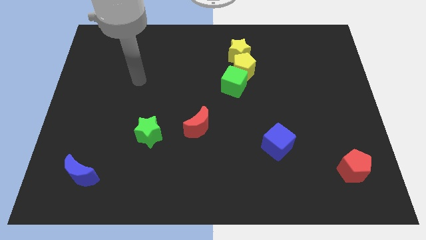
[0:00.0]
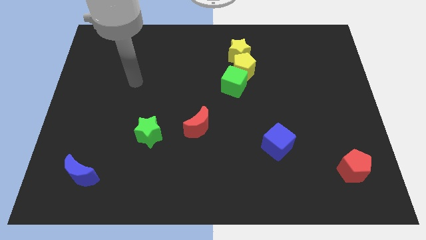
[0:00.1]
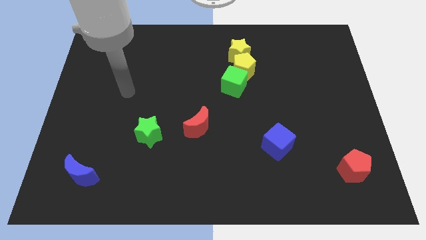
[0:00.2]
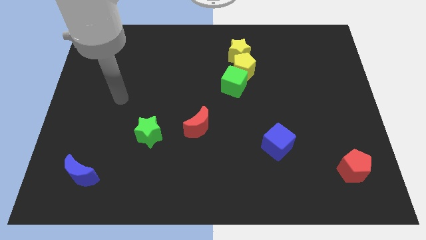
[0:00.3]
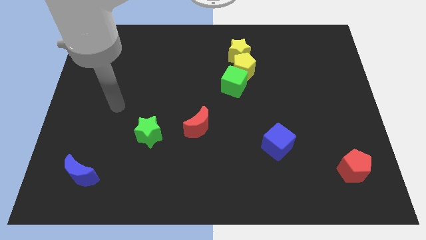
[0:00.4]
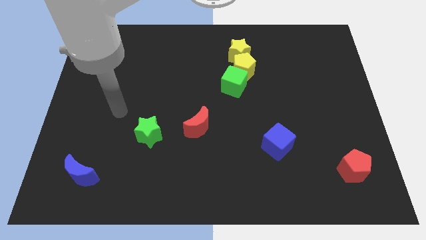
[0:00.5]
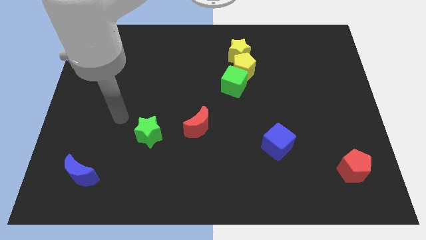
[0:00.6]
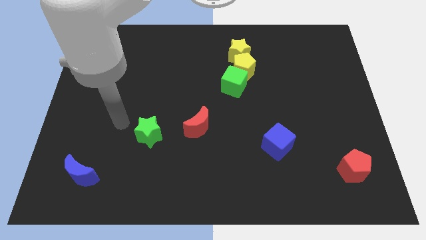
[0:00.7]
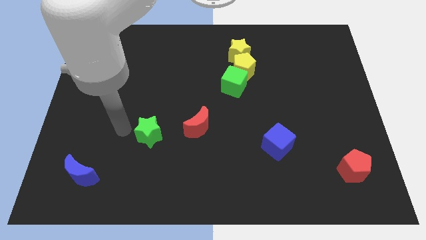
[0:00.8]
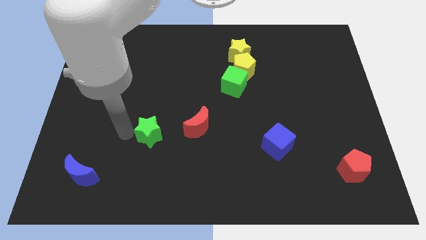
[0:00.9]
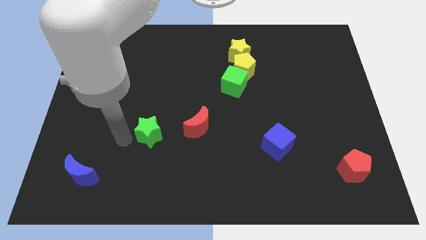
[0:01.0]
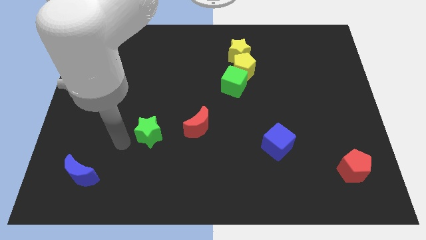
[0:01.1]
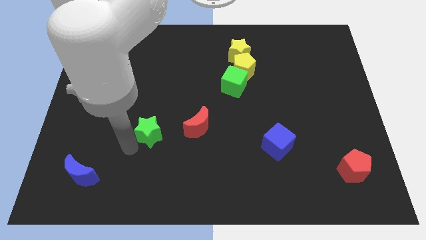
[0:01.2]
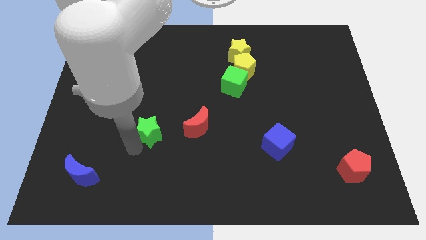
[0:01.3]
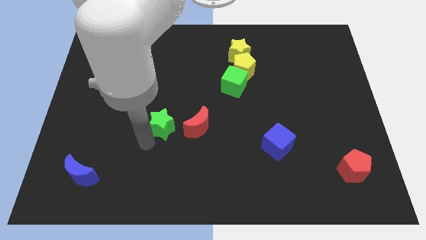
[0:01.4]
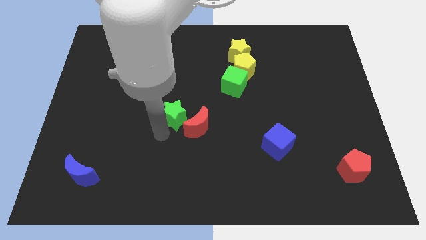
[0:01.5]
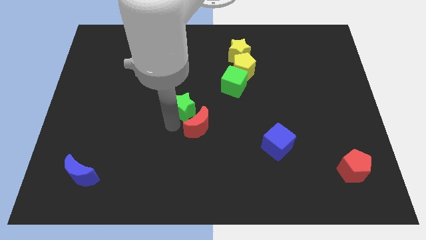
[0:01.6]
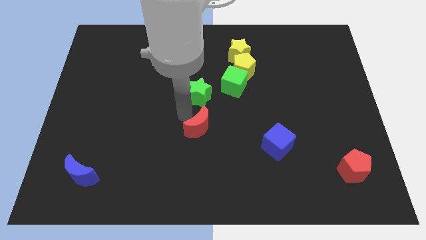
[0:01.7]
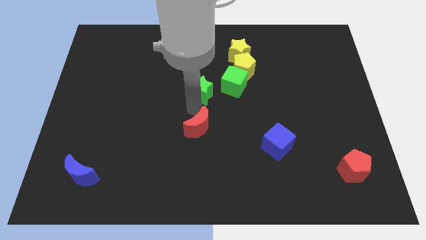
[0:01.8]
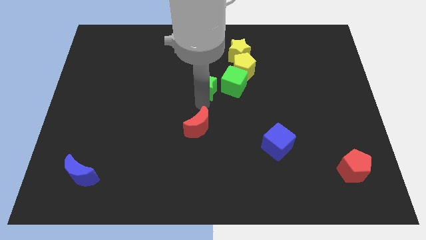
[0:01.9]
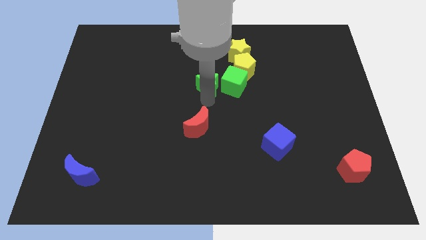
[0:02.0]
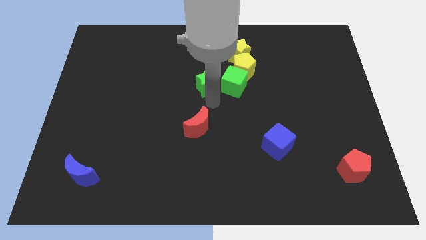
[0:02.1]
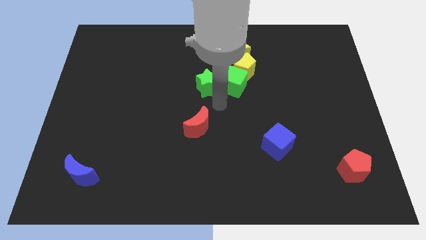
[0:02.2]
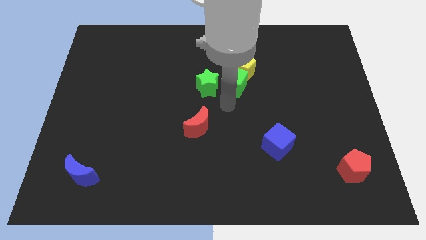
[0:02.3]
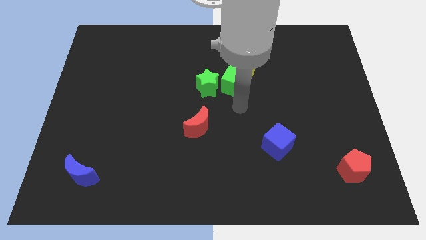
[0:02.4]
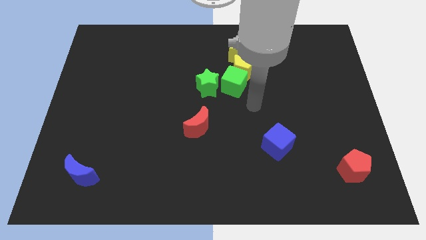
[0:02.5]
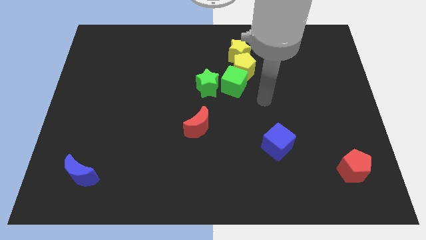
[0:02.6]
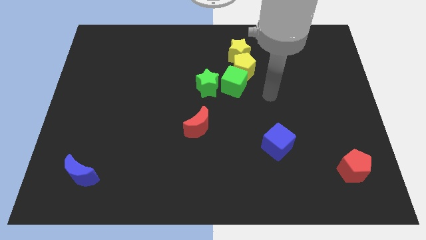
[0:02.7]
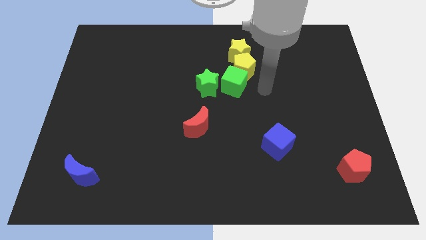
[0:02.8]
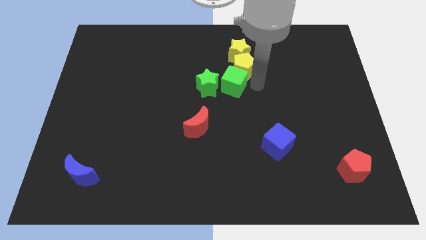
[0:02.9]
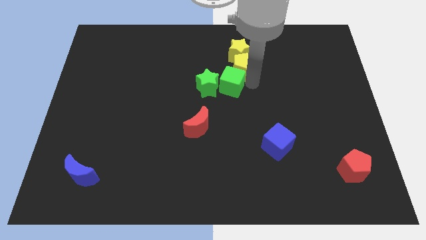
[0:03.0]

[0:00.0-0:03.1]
place the green star parallel left to the green cube

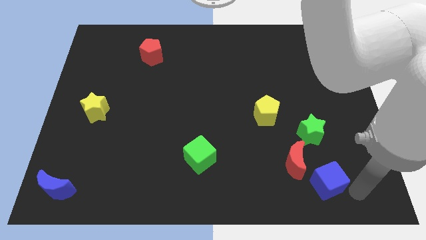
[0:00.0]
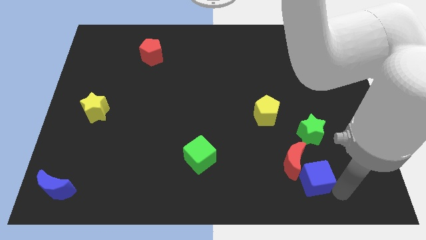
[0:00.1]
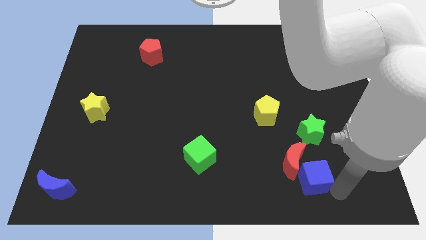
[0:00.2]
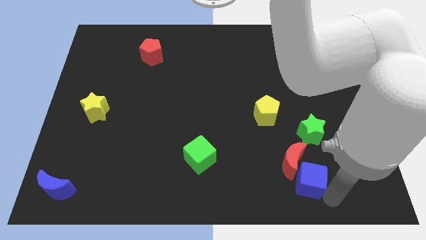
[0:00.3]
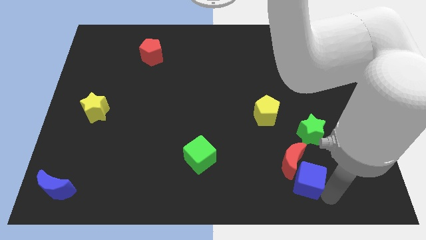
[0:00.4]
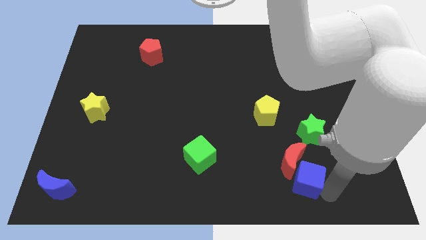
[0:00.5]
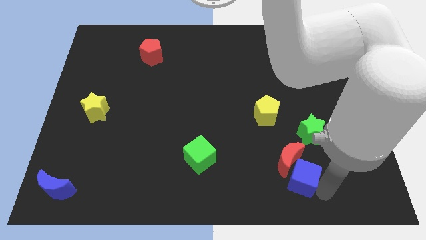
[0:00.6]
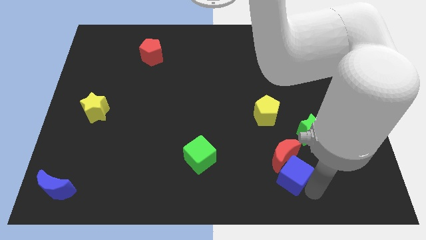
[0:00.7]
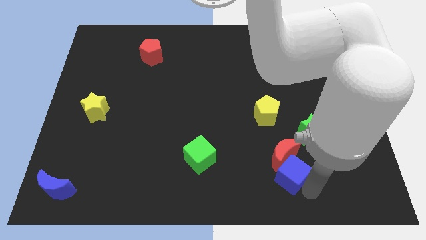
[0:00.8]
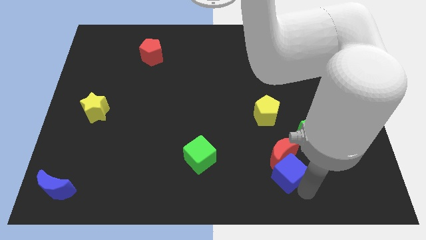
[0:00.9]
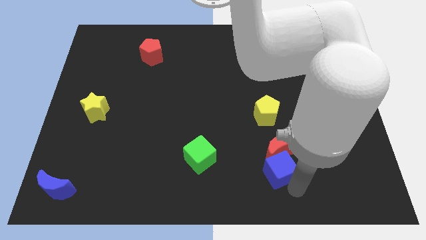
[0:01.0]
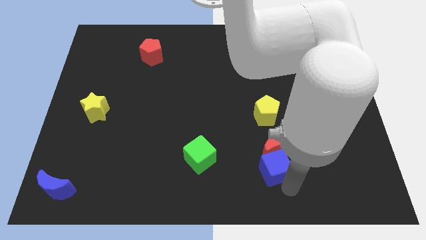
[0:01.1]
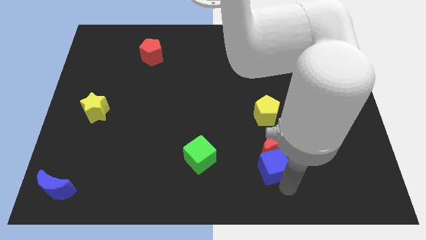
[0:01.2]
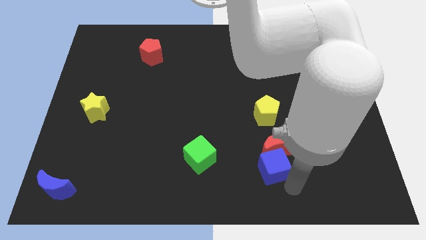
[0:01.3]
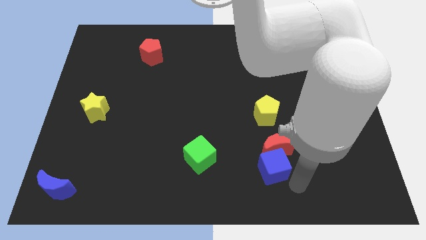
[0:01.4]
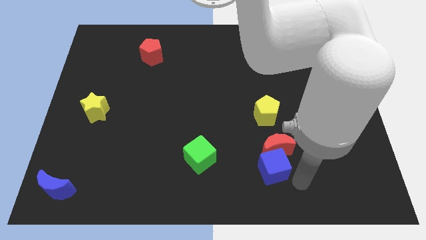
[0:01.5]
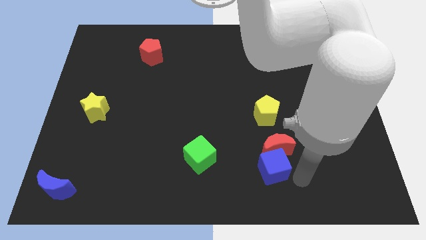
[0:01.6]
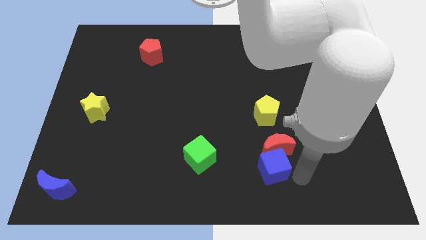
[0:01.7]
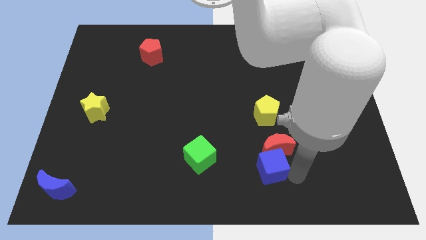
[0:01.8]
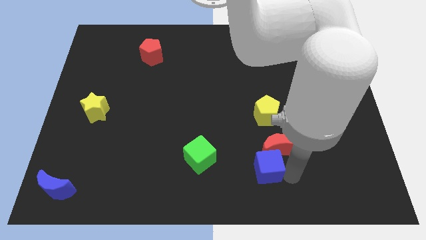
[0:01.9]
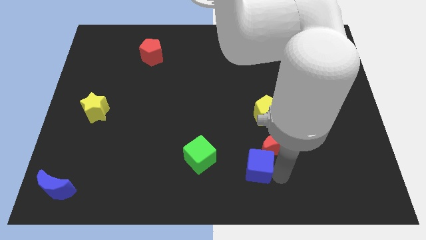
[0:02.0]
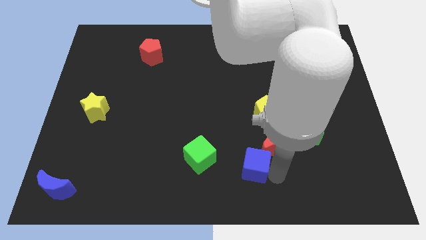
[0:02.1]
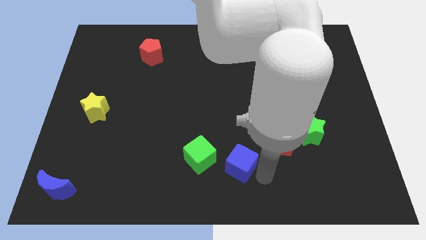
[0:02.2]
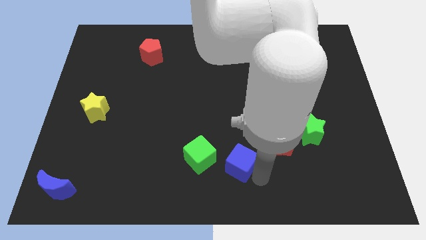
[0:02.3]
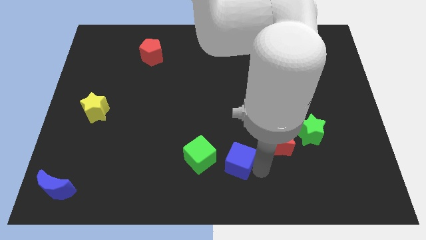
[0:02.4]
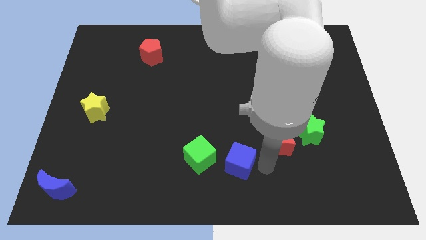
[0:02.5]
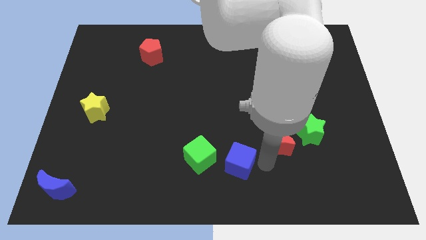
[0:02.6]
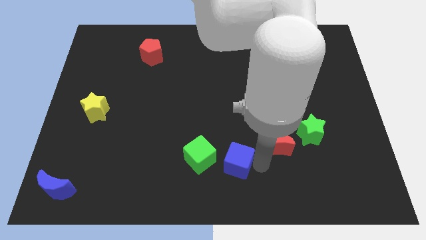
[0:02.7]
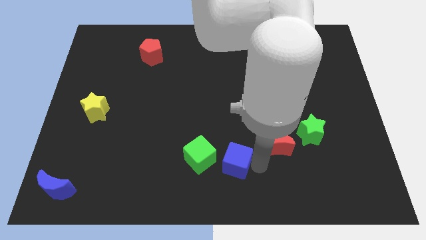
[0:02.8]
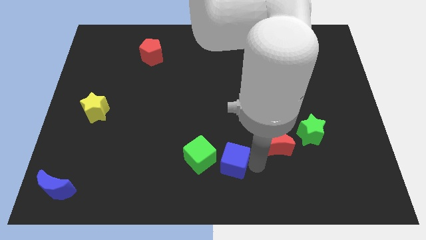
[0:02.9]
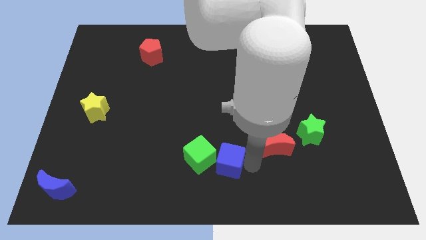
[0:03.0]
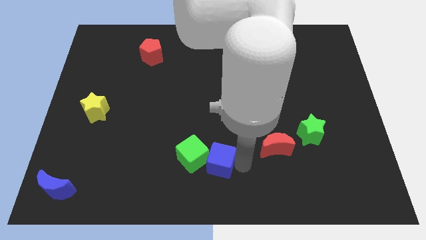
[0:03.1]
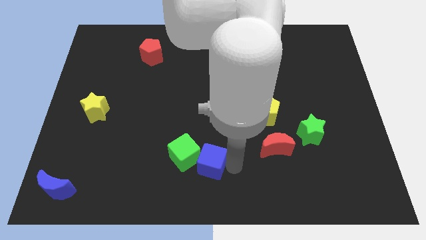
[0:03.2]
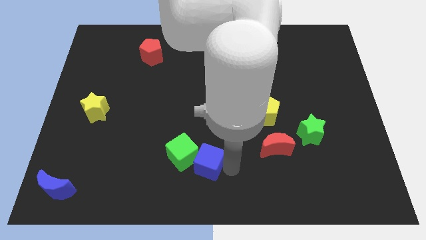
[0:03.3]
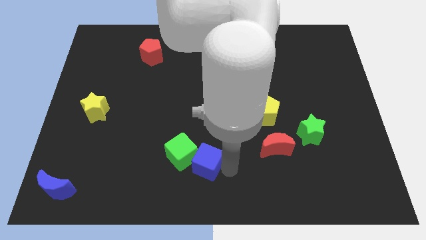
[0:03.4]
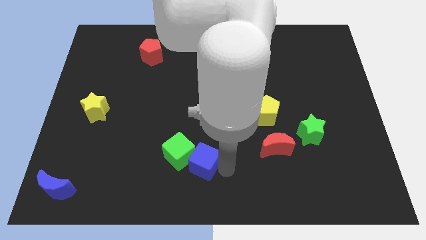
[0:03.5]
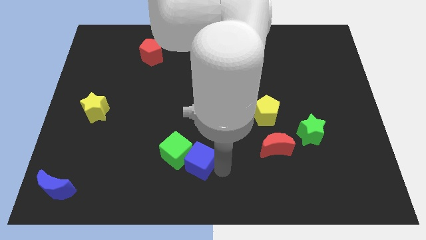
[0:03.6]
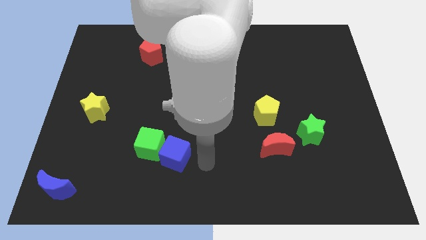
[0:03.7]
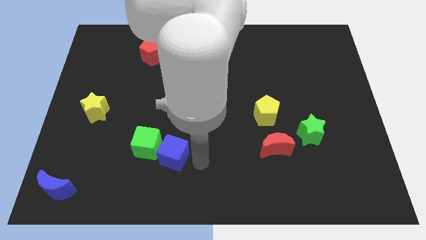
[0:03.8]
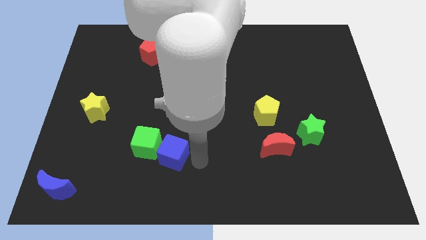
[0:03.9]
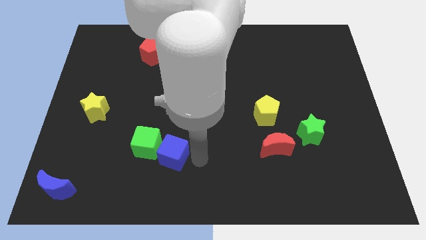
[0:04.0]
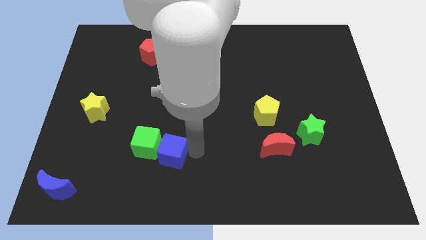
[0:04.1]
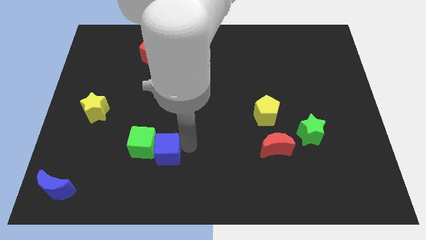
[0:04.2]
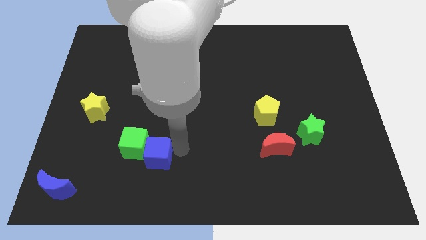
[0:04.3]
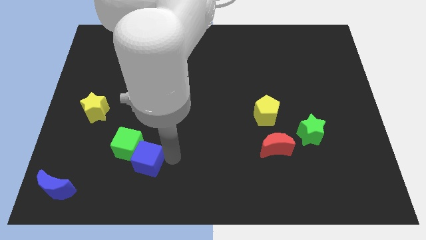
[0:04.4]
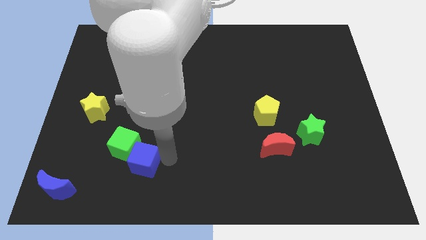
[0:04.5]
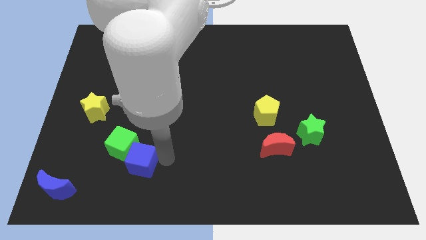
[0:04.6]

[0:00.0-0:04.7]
push the blue cube into the green cube

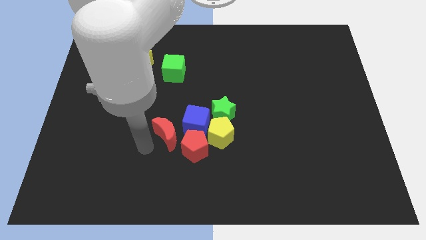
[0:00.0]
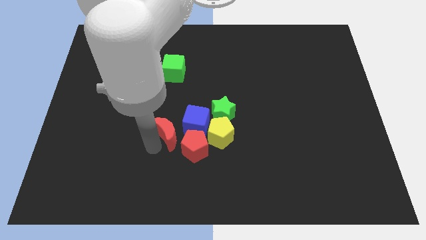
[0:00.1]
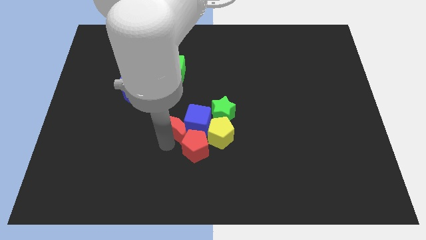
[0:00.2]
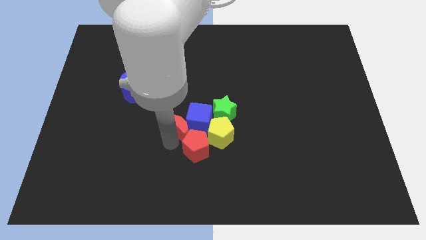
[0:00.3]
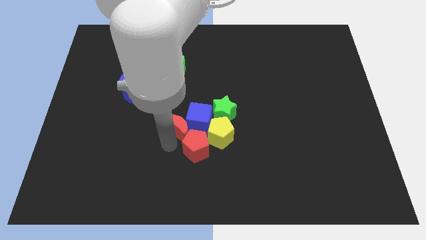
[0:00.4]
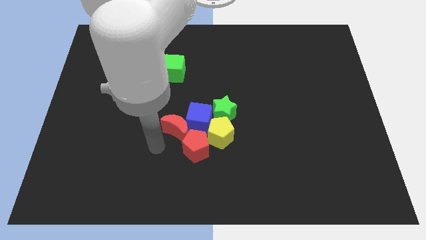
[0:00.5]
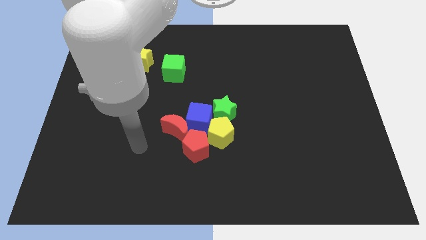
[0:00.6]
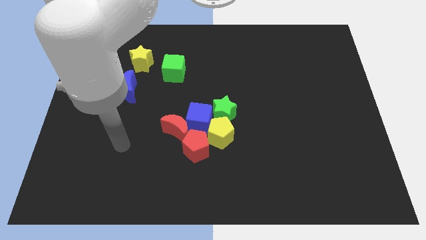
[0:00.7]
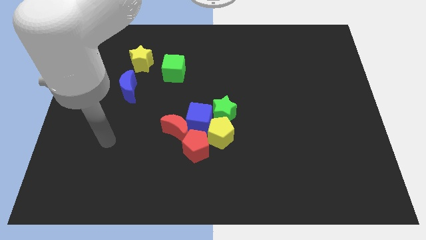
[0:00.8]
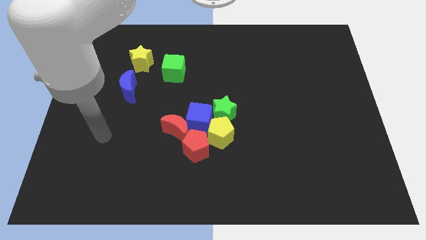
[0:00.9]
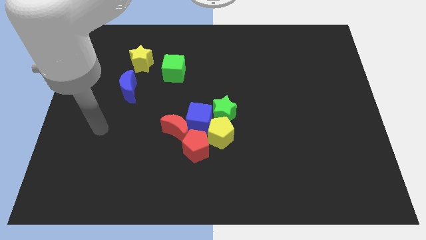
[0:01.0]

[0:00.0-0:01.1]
put the red moon into the blue cube
